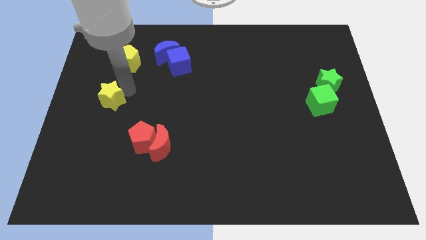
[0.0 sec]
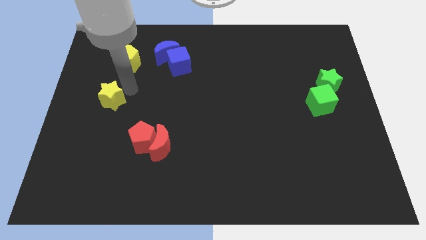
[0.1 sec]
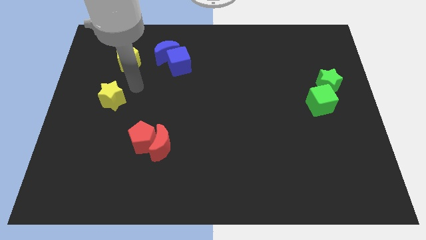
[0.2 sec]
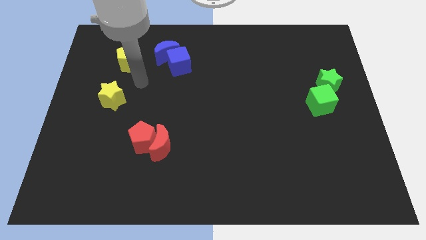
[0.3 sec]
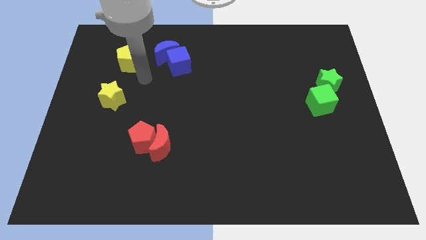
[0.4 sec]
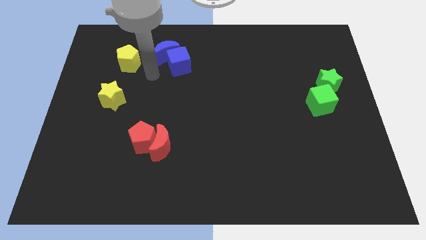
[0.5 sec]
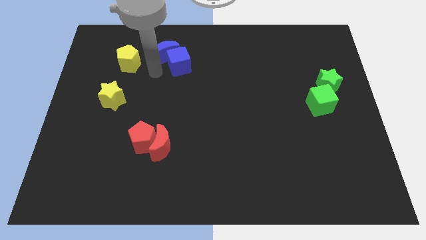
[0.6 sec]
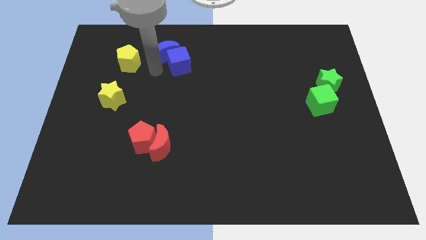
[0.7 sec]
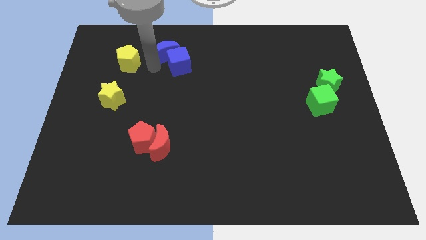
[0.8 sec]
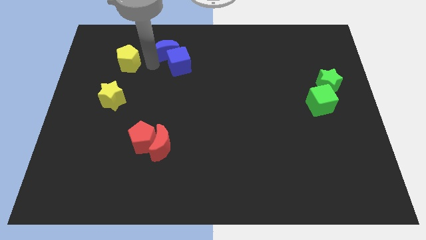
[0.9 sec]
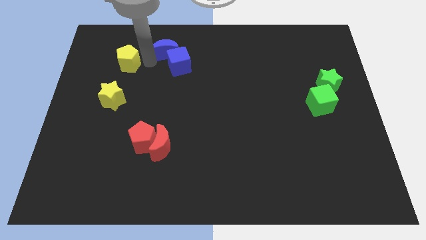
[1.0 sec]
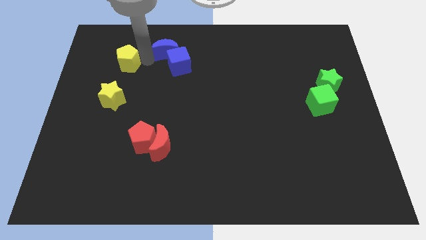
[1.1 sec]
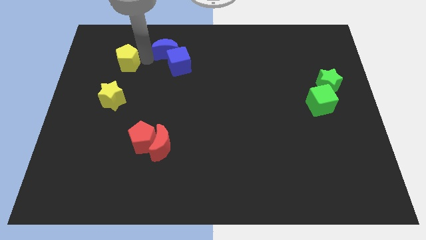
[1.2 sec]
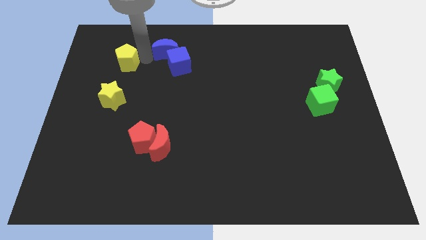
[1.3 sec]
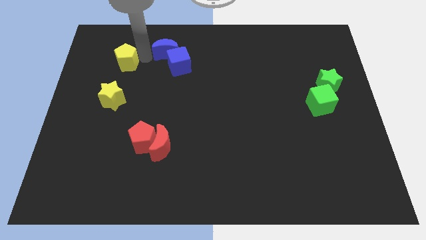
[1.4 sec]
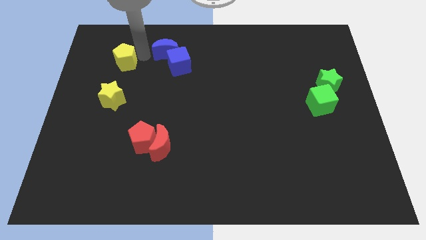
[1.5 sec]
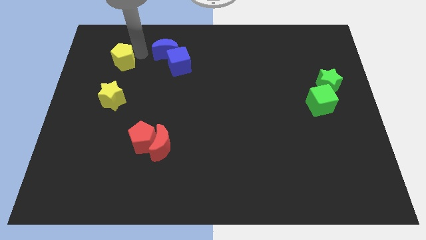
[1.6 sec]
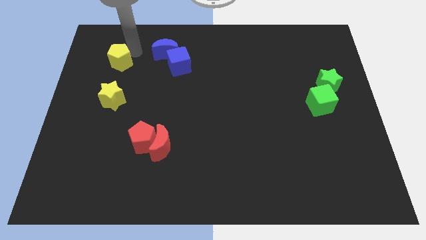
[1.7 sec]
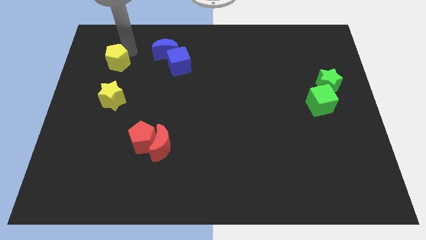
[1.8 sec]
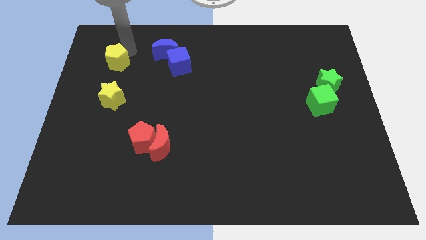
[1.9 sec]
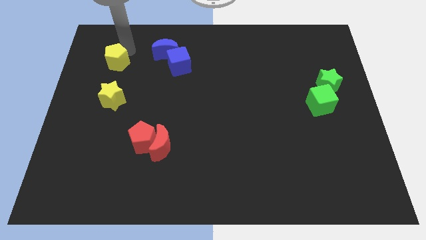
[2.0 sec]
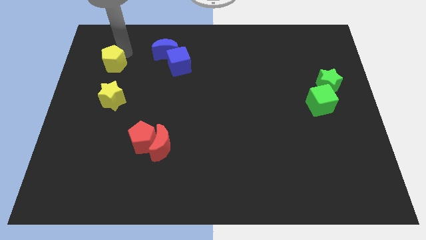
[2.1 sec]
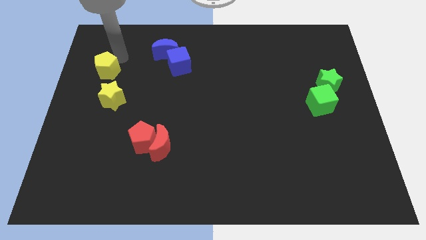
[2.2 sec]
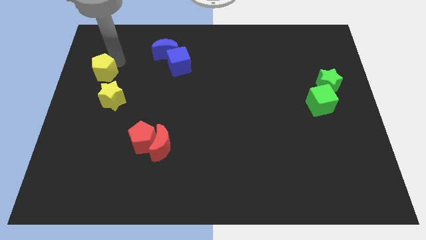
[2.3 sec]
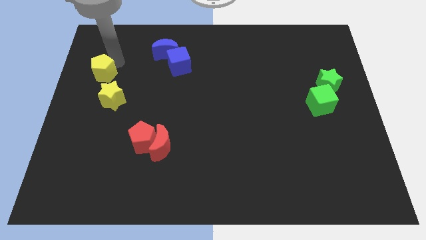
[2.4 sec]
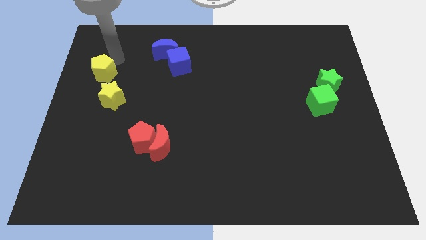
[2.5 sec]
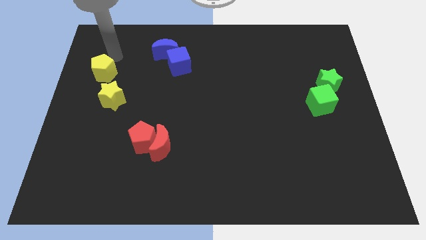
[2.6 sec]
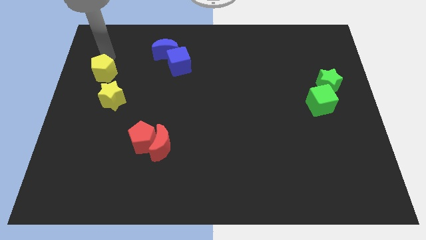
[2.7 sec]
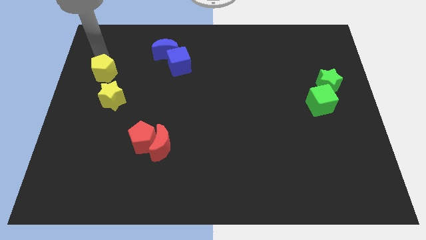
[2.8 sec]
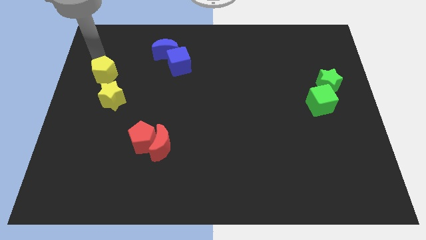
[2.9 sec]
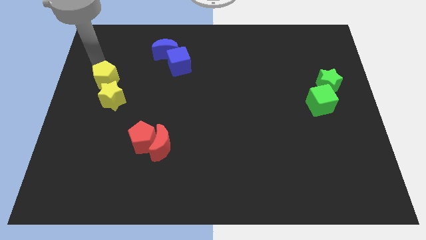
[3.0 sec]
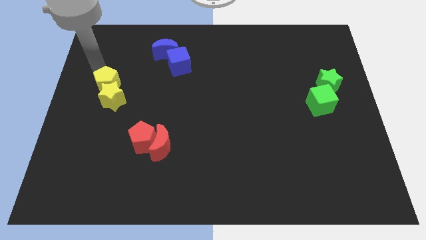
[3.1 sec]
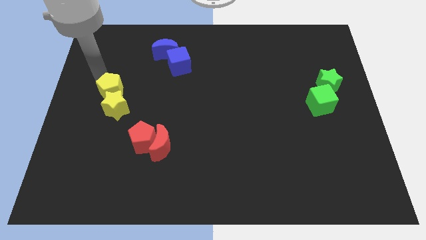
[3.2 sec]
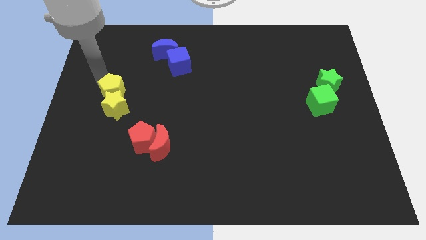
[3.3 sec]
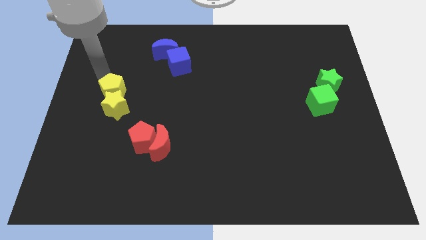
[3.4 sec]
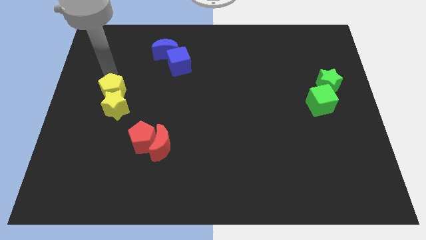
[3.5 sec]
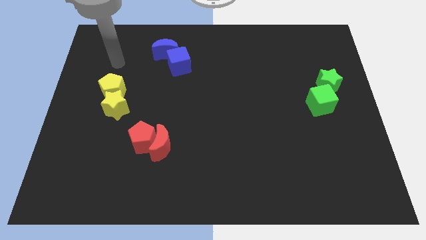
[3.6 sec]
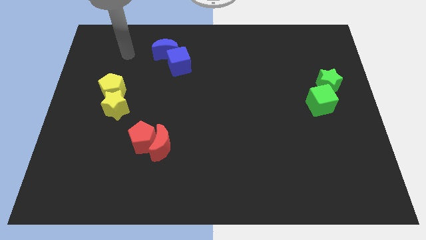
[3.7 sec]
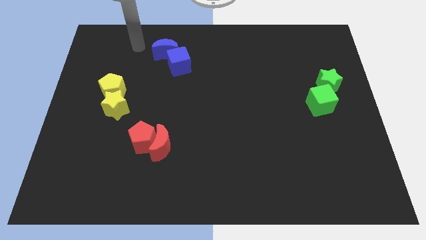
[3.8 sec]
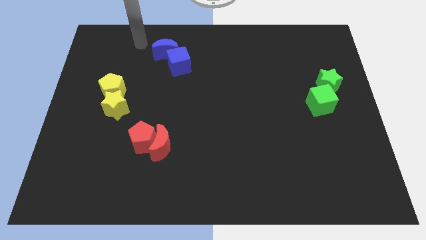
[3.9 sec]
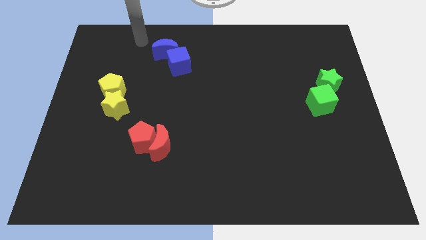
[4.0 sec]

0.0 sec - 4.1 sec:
place the yellow pentagon above the yellow star

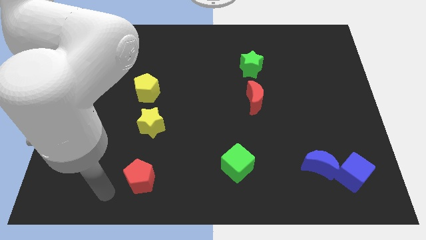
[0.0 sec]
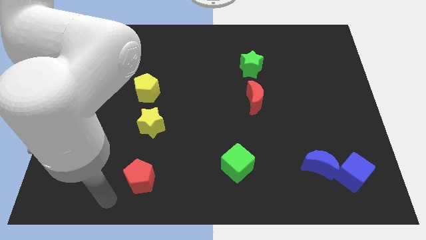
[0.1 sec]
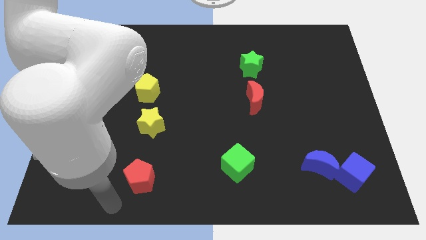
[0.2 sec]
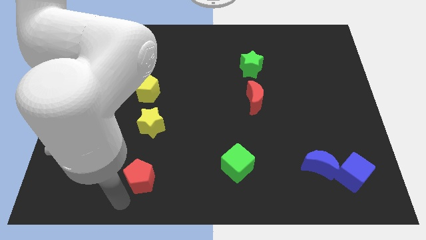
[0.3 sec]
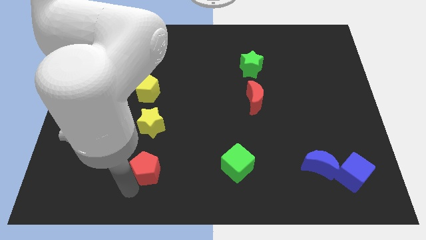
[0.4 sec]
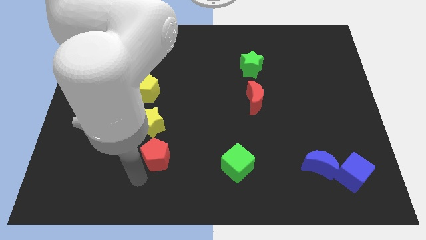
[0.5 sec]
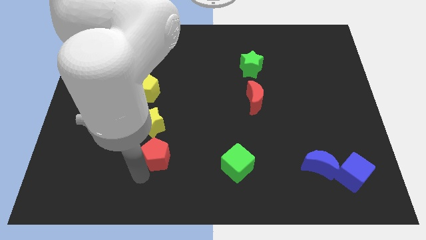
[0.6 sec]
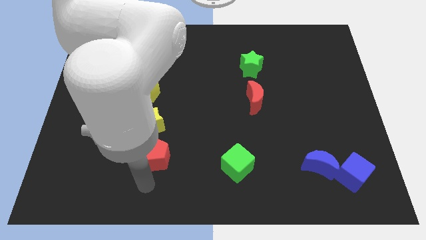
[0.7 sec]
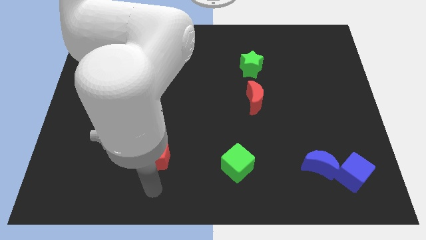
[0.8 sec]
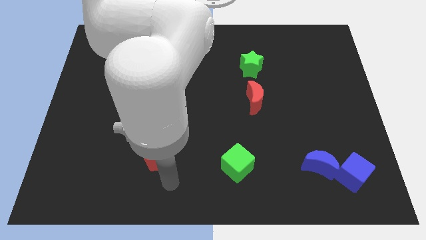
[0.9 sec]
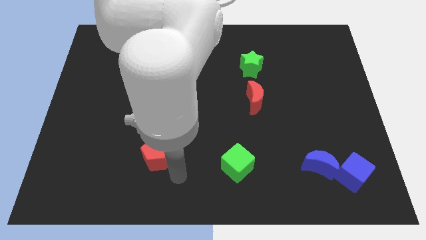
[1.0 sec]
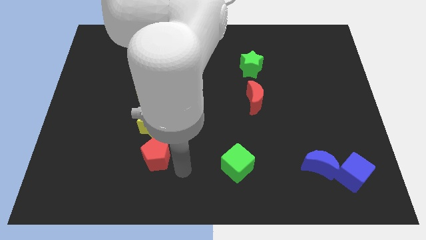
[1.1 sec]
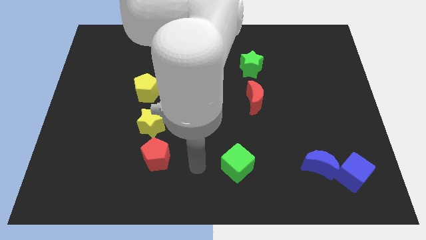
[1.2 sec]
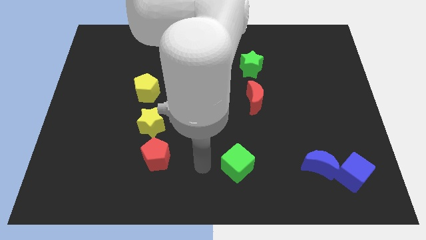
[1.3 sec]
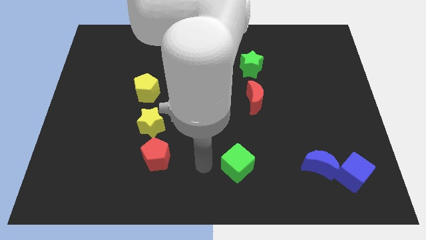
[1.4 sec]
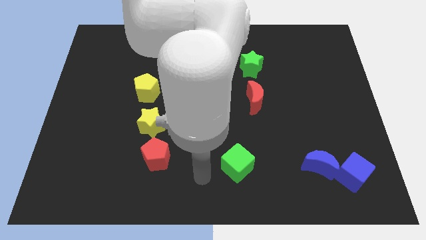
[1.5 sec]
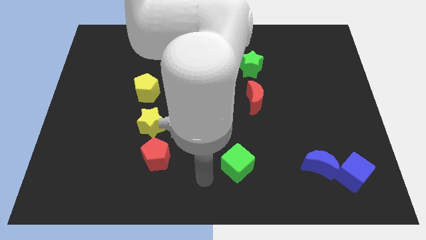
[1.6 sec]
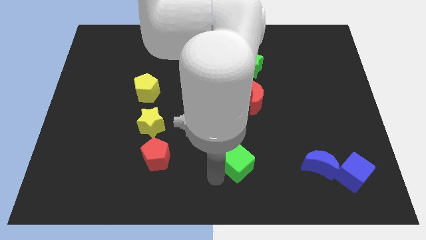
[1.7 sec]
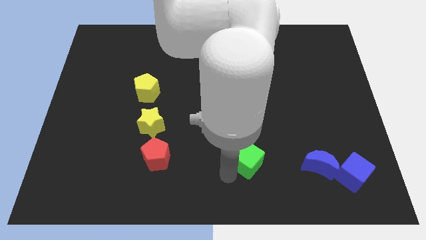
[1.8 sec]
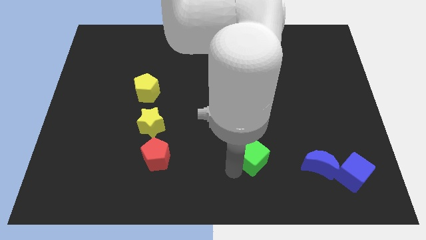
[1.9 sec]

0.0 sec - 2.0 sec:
move red pentago below yellow star

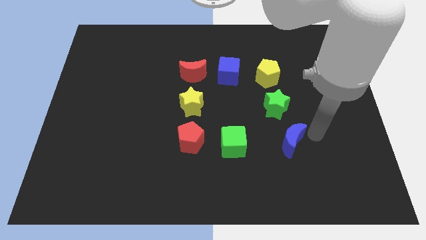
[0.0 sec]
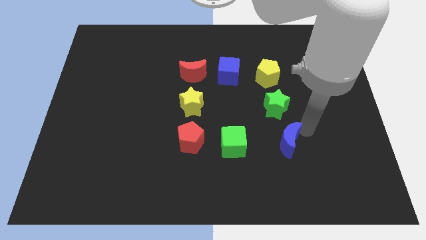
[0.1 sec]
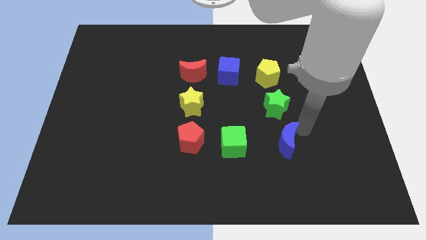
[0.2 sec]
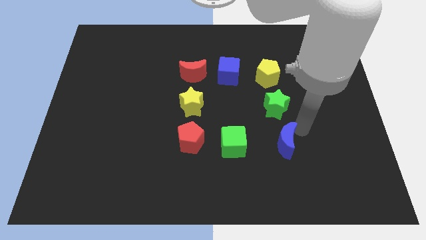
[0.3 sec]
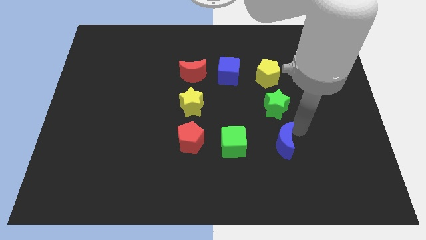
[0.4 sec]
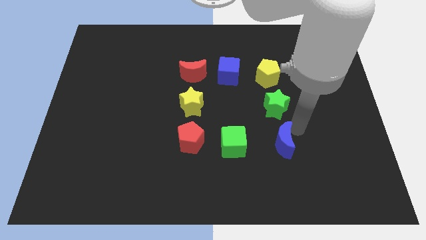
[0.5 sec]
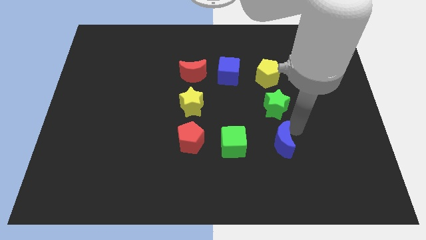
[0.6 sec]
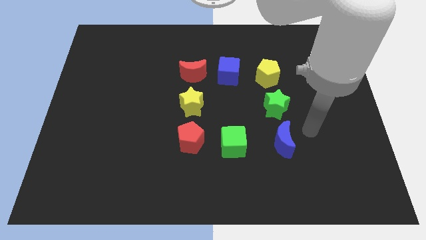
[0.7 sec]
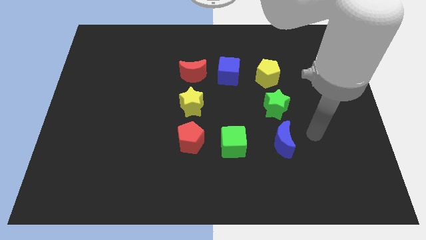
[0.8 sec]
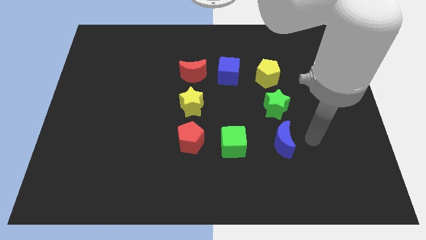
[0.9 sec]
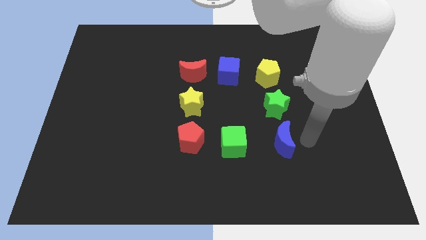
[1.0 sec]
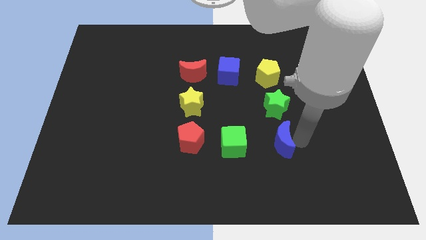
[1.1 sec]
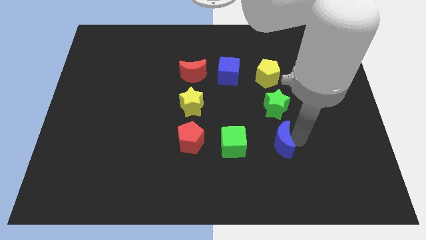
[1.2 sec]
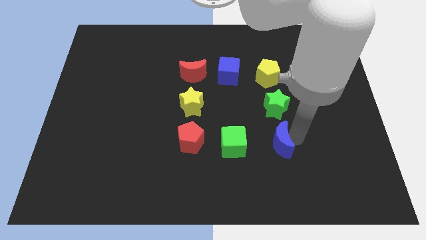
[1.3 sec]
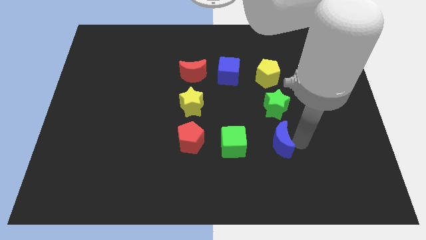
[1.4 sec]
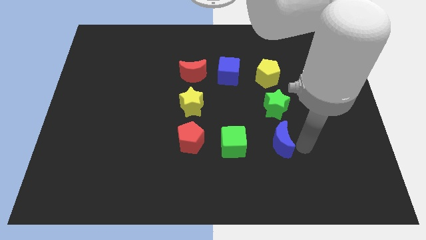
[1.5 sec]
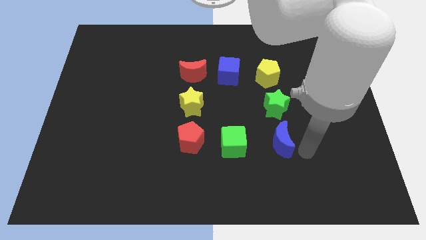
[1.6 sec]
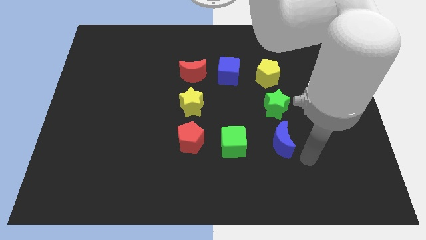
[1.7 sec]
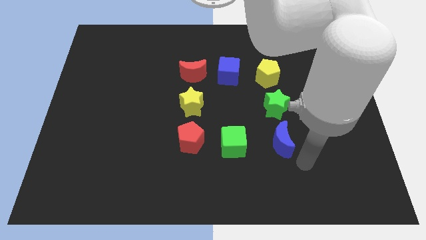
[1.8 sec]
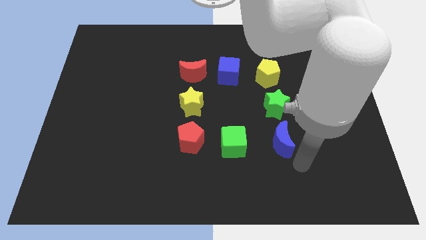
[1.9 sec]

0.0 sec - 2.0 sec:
slide the blue moon below the green star

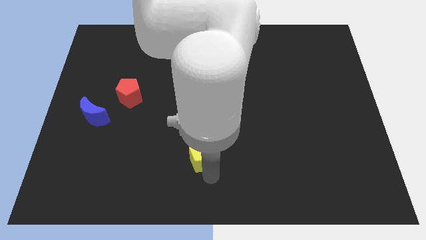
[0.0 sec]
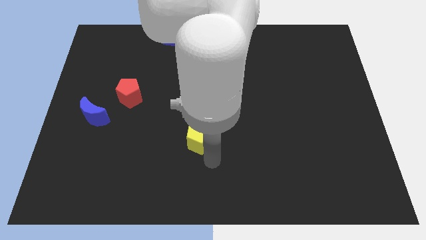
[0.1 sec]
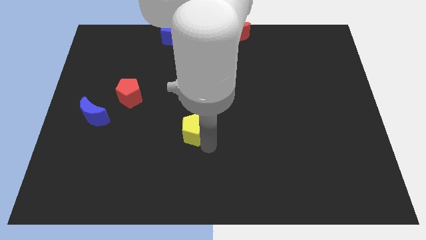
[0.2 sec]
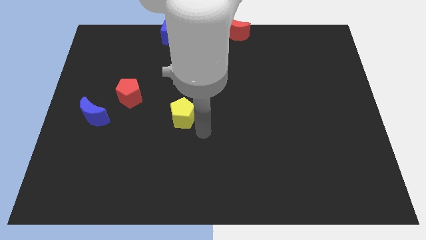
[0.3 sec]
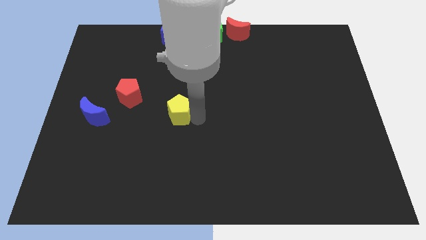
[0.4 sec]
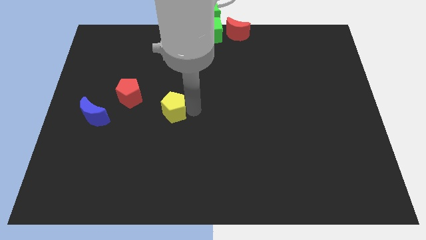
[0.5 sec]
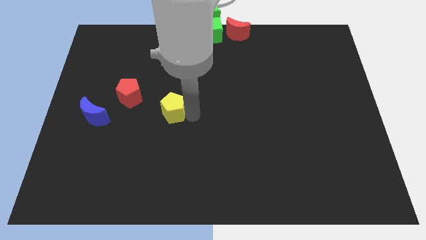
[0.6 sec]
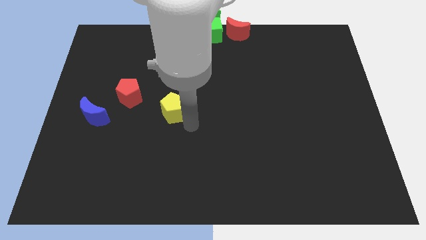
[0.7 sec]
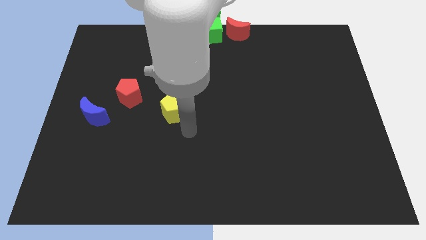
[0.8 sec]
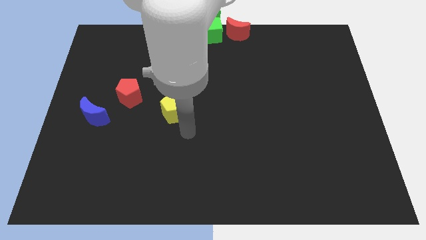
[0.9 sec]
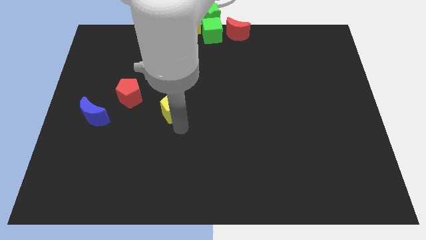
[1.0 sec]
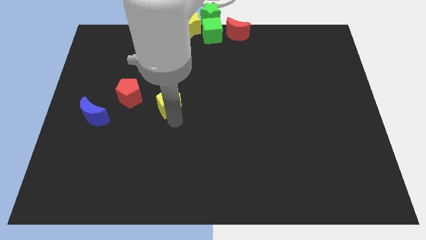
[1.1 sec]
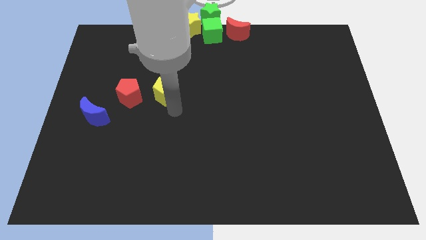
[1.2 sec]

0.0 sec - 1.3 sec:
push yellow pentagon towards the red pentagon
